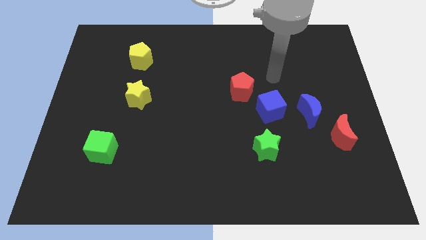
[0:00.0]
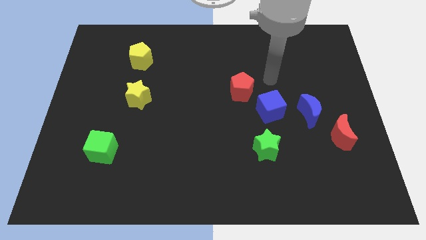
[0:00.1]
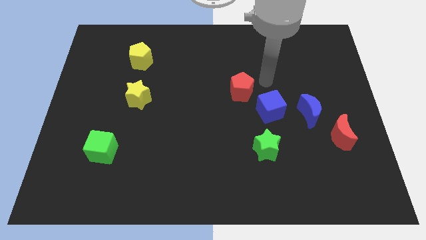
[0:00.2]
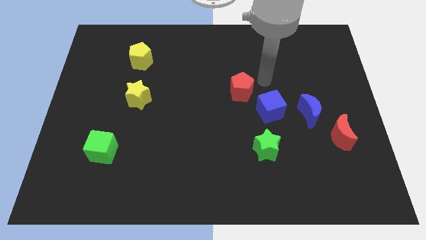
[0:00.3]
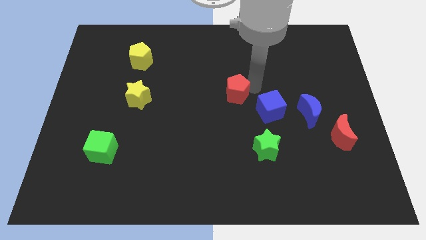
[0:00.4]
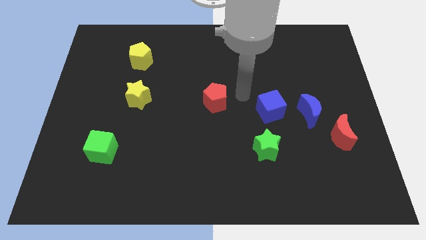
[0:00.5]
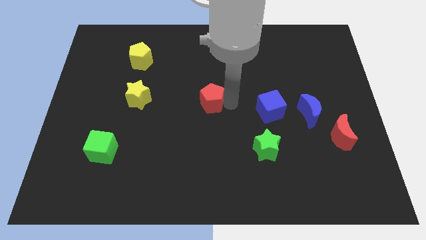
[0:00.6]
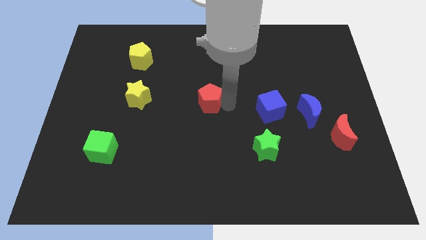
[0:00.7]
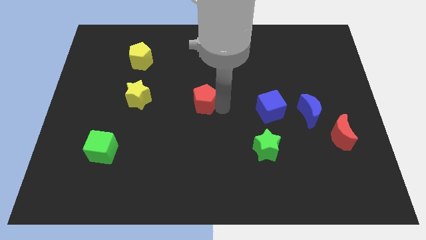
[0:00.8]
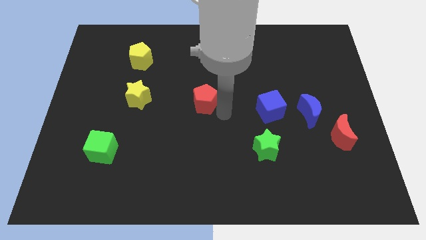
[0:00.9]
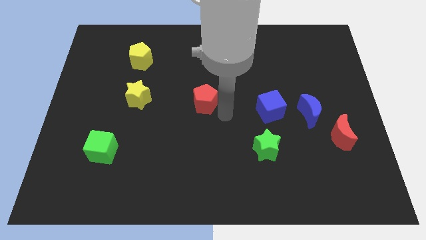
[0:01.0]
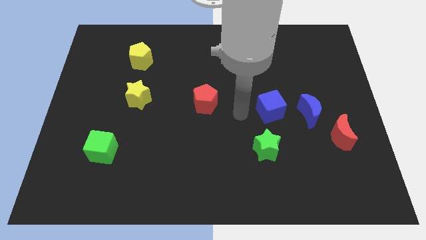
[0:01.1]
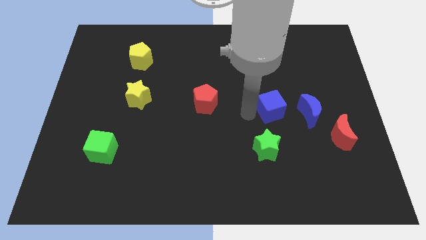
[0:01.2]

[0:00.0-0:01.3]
place the red pentagon at the centre of the board

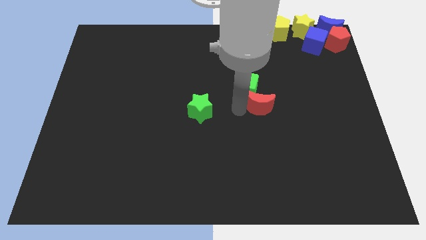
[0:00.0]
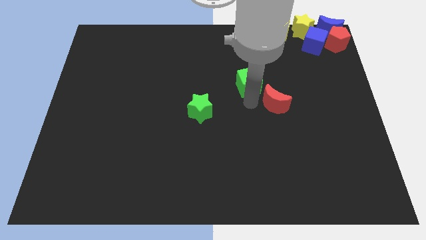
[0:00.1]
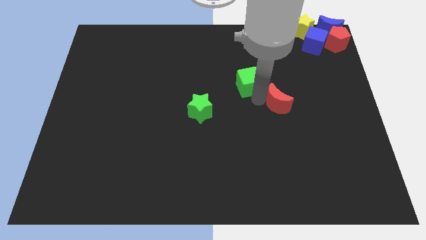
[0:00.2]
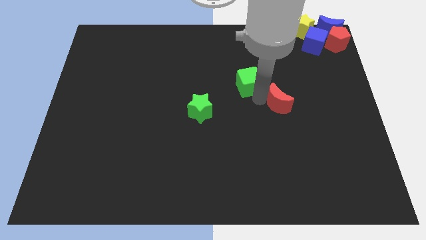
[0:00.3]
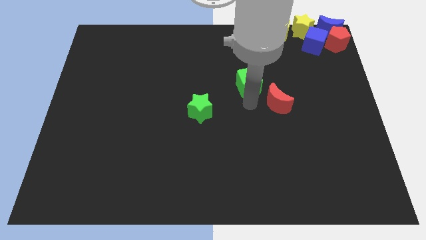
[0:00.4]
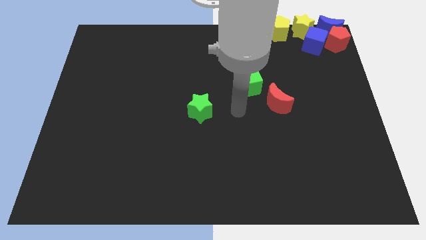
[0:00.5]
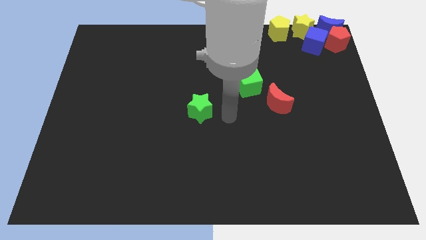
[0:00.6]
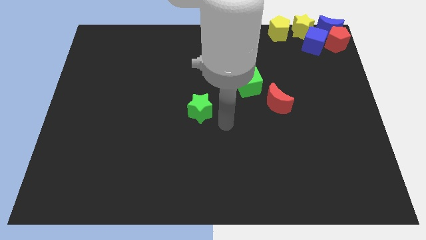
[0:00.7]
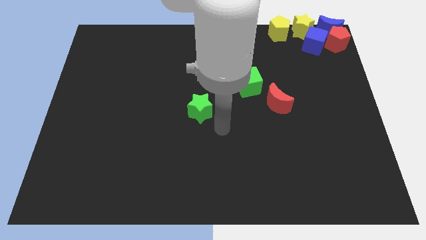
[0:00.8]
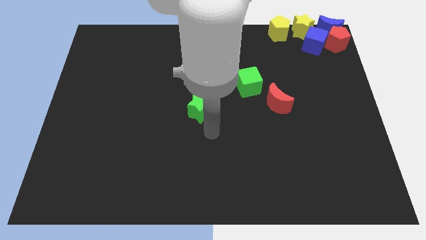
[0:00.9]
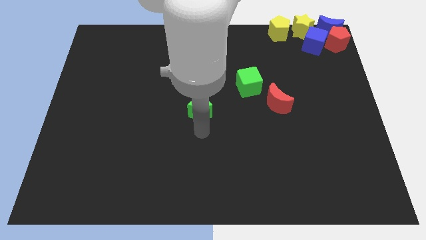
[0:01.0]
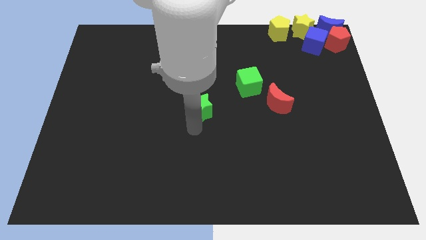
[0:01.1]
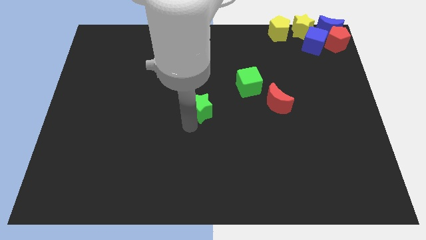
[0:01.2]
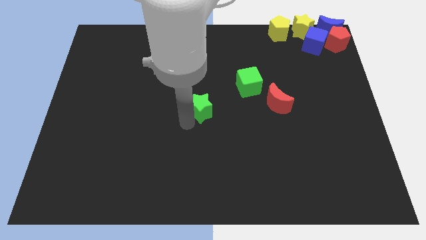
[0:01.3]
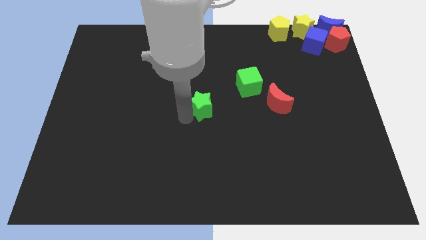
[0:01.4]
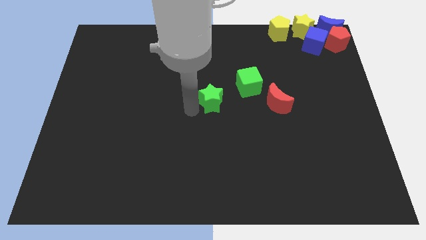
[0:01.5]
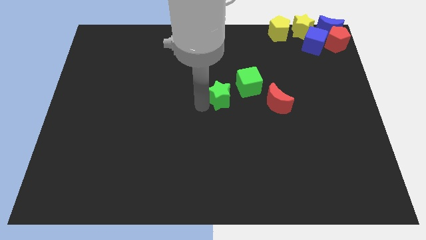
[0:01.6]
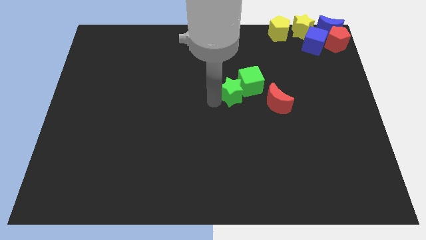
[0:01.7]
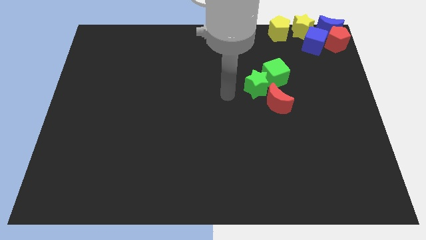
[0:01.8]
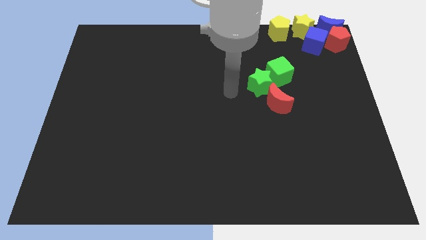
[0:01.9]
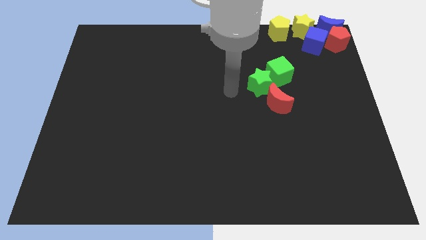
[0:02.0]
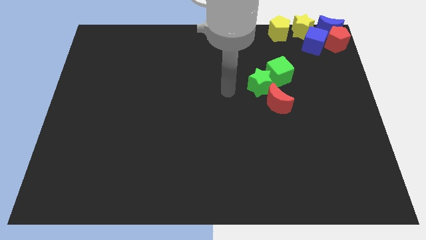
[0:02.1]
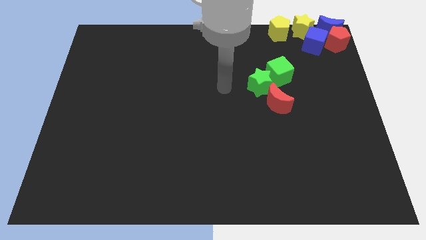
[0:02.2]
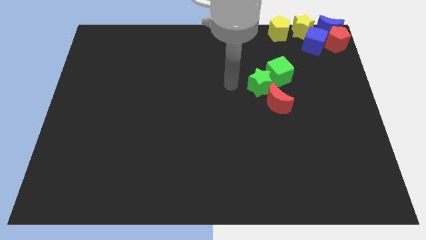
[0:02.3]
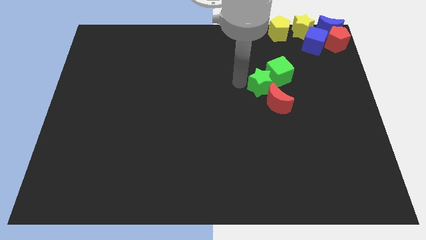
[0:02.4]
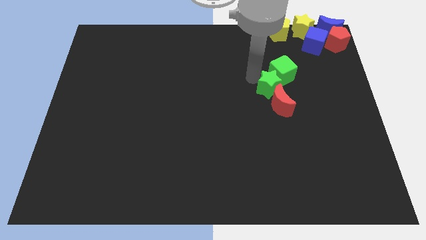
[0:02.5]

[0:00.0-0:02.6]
move the green star into the green cube

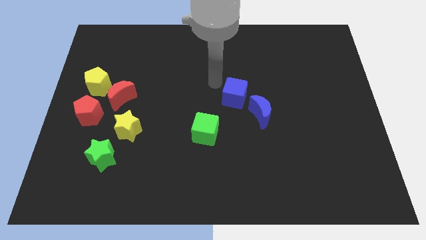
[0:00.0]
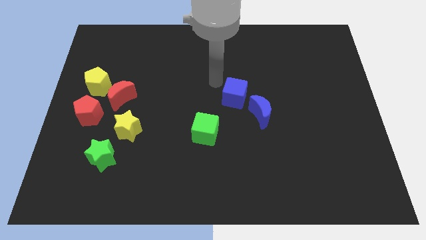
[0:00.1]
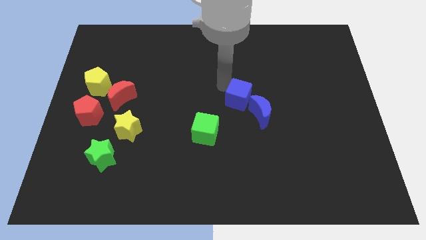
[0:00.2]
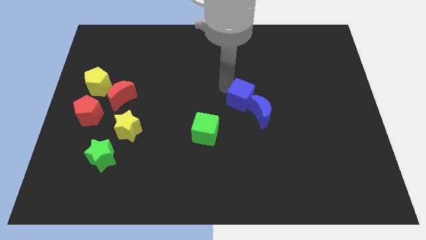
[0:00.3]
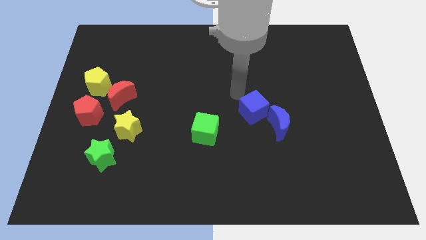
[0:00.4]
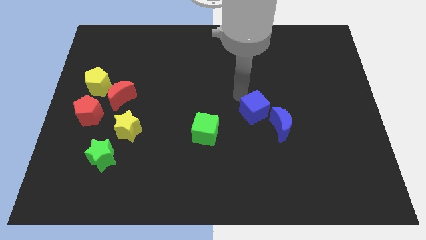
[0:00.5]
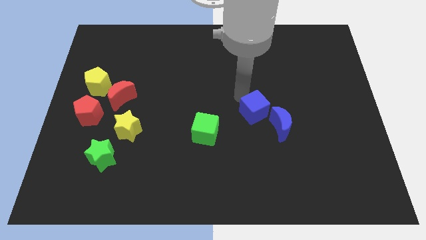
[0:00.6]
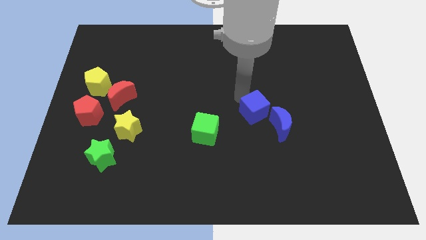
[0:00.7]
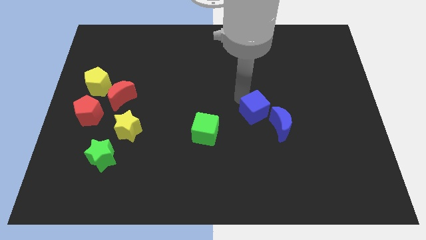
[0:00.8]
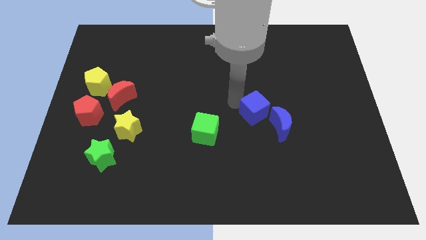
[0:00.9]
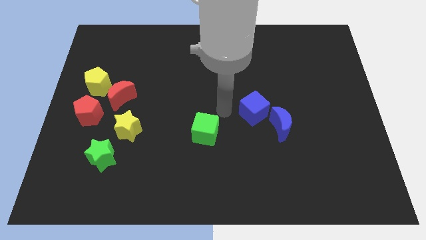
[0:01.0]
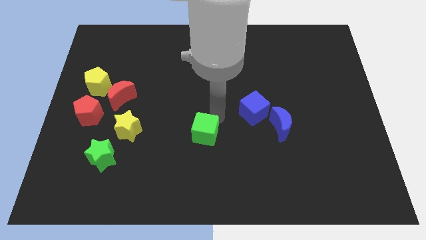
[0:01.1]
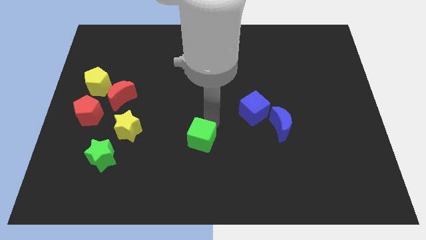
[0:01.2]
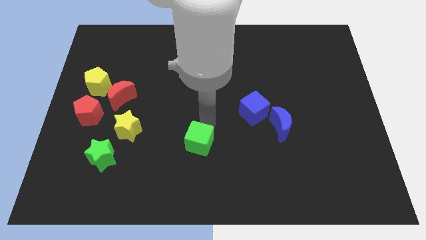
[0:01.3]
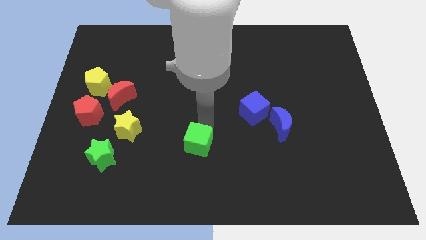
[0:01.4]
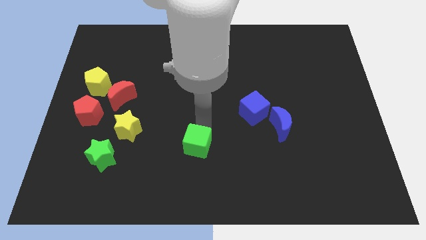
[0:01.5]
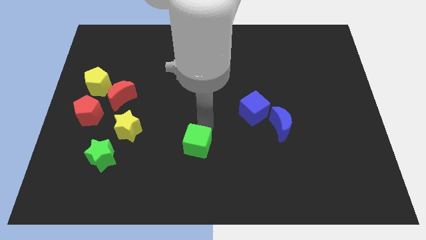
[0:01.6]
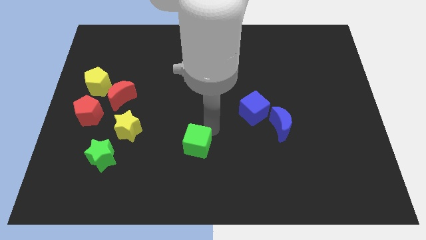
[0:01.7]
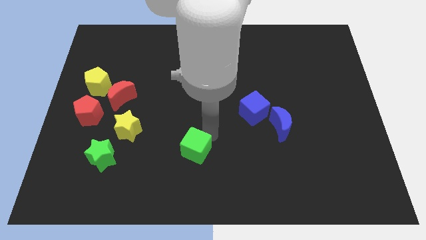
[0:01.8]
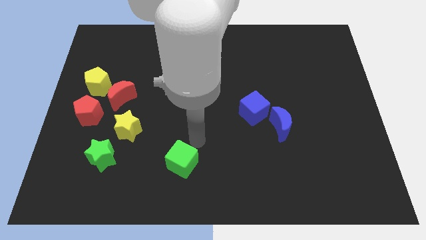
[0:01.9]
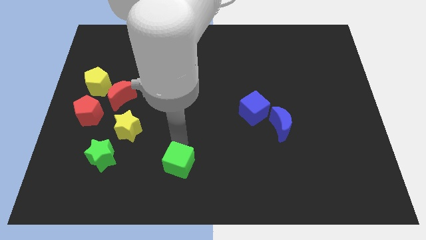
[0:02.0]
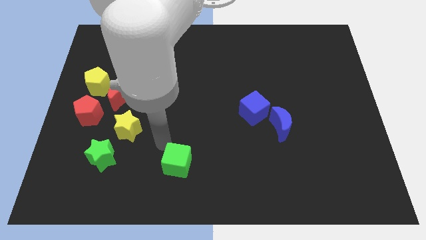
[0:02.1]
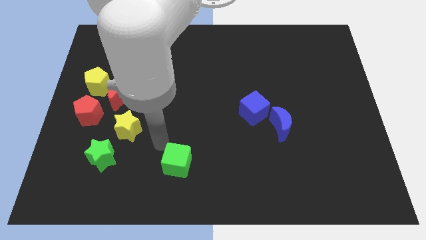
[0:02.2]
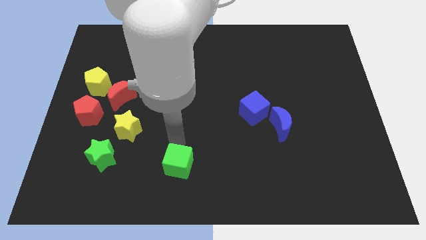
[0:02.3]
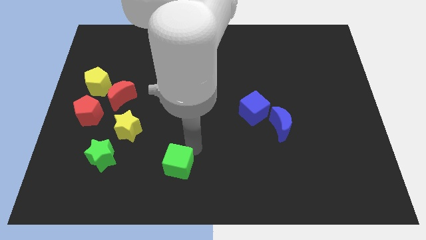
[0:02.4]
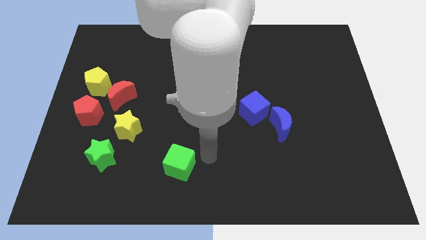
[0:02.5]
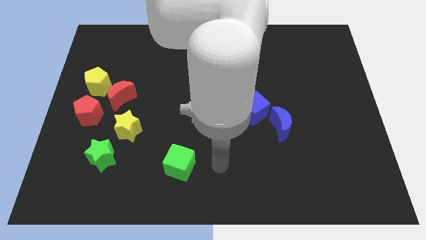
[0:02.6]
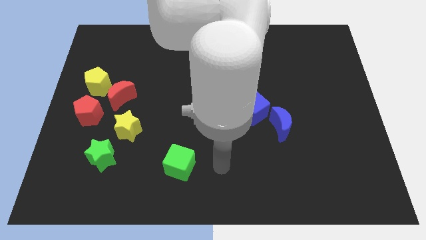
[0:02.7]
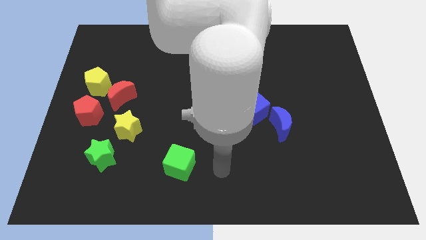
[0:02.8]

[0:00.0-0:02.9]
push green cube downwards to the bottom

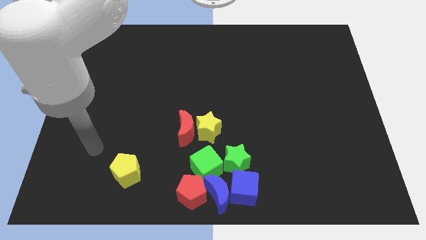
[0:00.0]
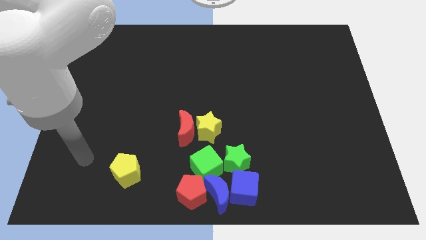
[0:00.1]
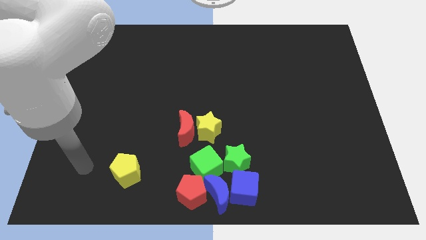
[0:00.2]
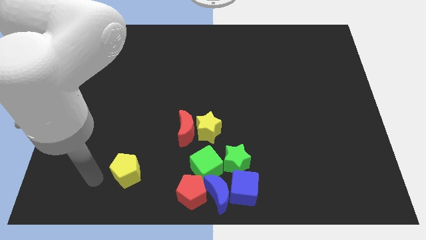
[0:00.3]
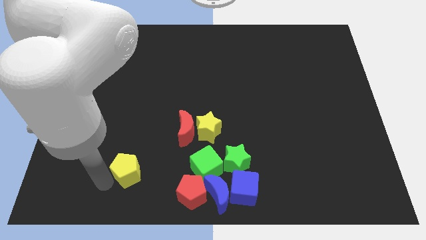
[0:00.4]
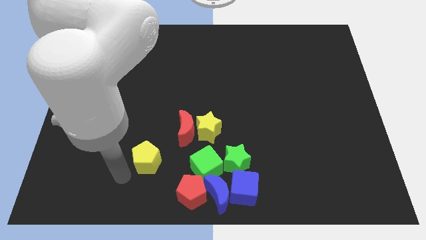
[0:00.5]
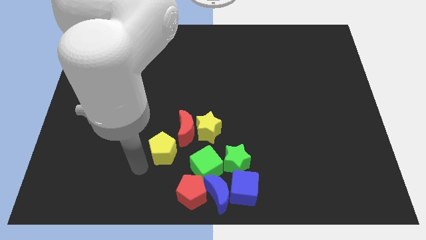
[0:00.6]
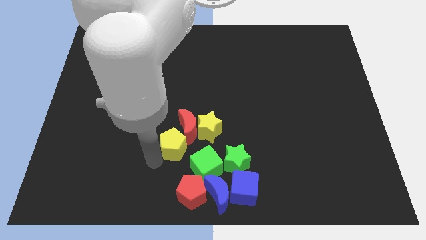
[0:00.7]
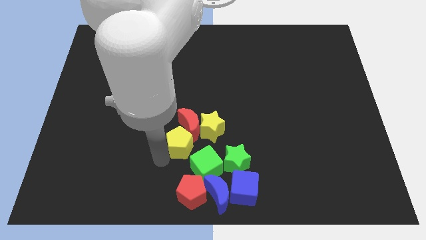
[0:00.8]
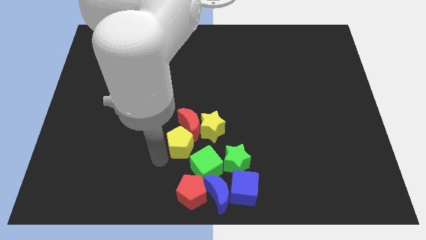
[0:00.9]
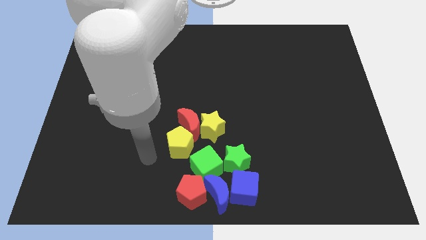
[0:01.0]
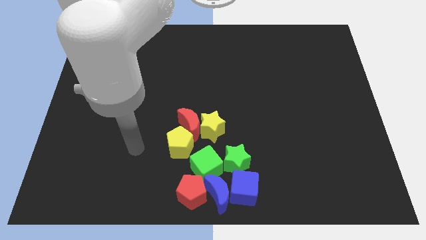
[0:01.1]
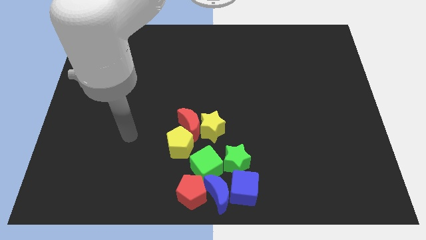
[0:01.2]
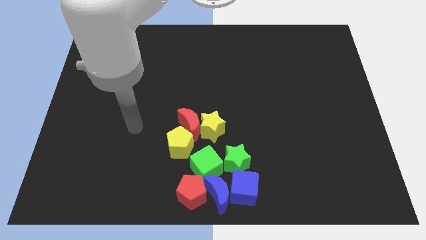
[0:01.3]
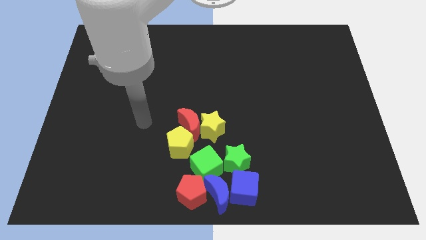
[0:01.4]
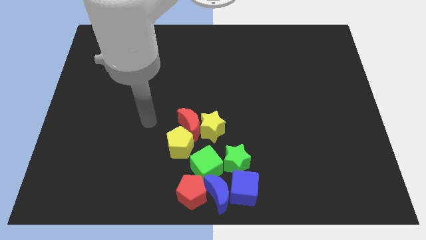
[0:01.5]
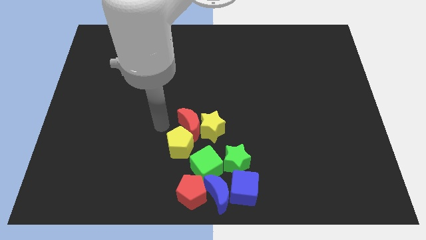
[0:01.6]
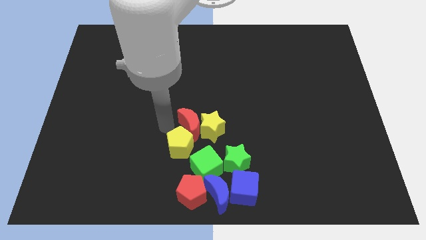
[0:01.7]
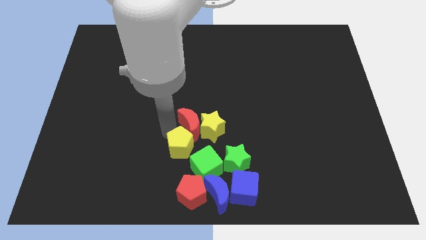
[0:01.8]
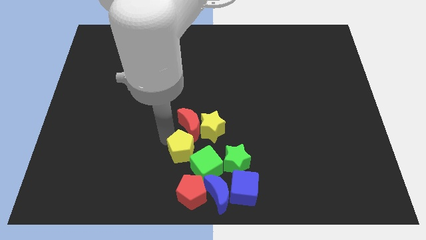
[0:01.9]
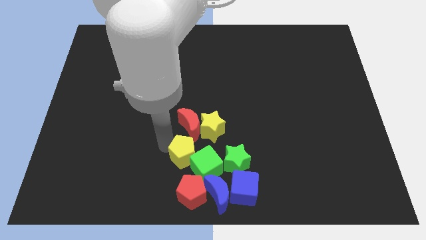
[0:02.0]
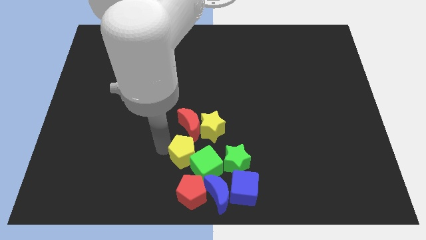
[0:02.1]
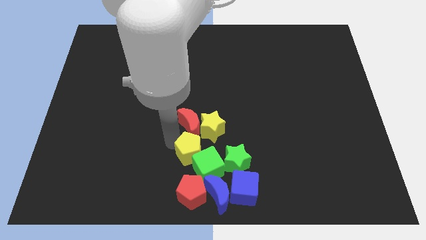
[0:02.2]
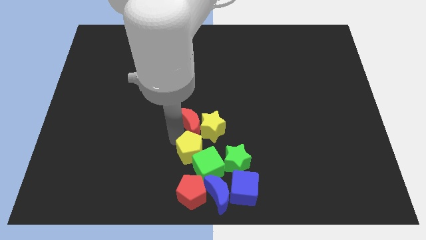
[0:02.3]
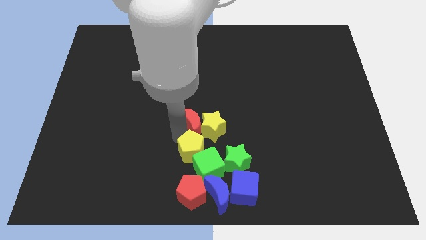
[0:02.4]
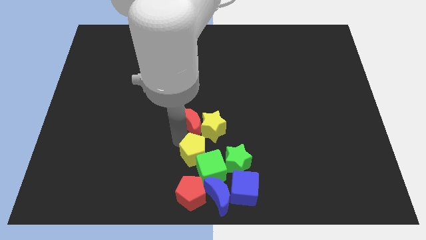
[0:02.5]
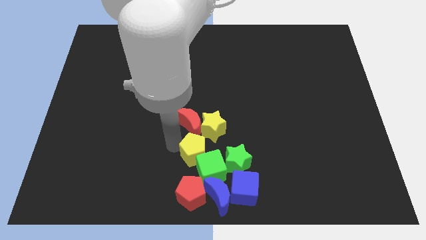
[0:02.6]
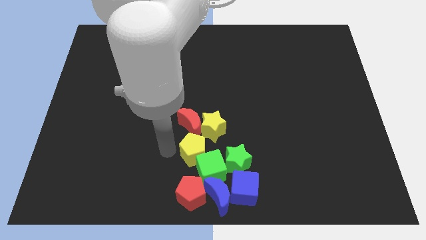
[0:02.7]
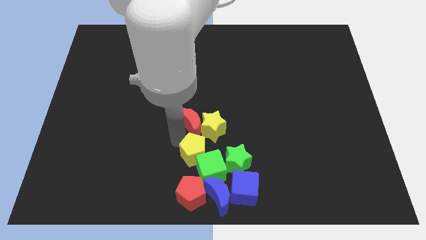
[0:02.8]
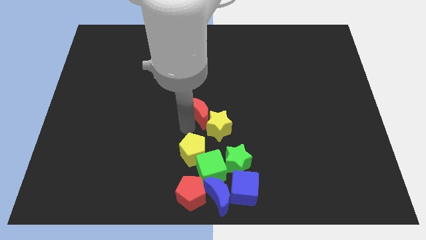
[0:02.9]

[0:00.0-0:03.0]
push the yellow pentagon into the group of blocks
